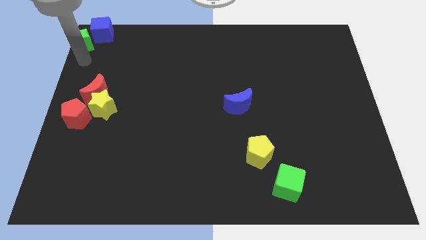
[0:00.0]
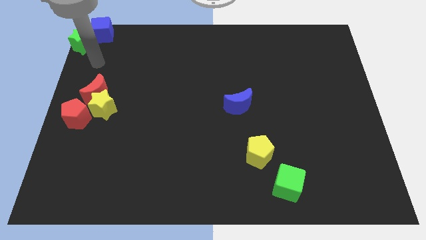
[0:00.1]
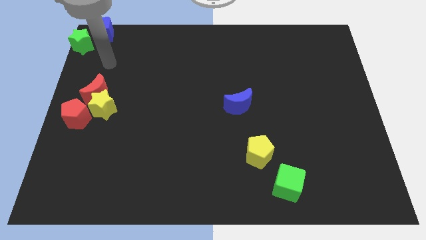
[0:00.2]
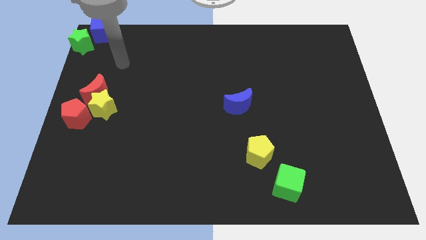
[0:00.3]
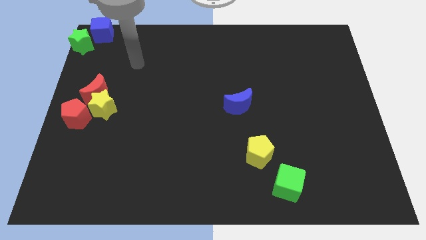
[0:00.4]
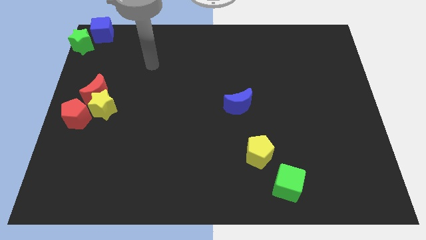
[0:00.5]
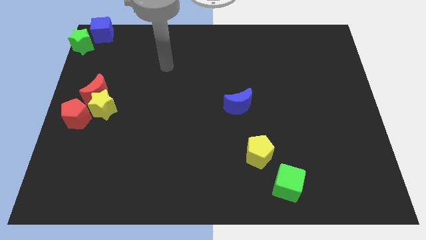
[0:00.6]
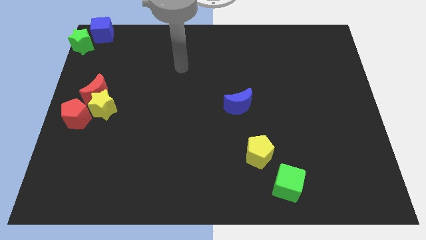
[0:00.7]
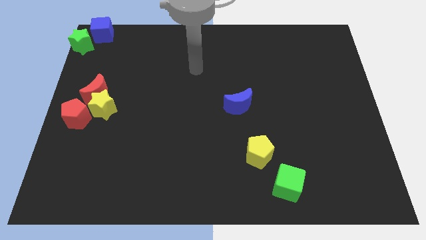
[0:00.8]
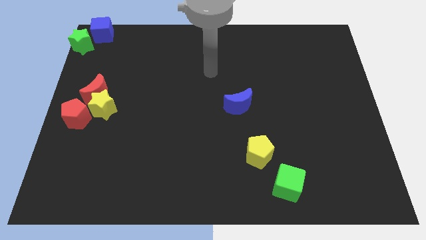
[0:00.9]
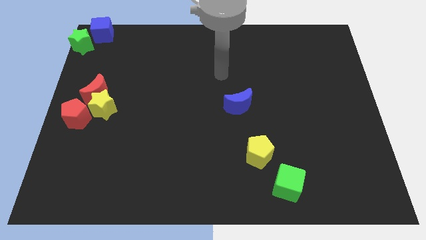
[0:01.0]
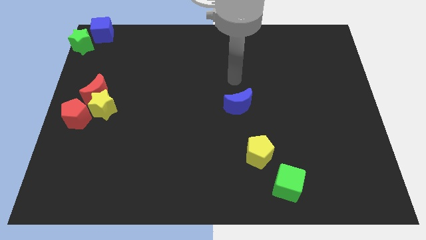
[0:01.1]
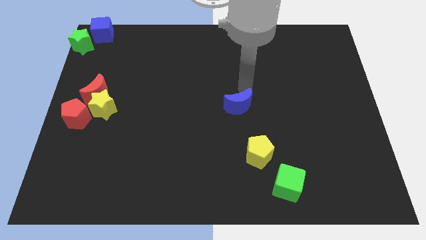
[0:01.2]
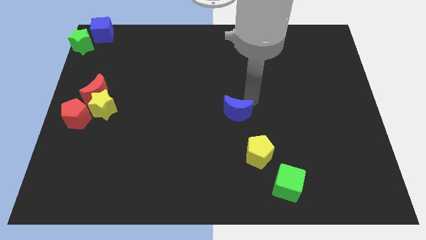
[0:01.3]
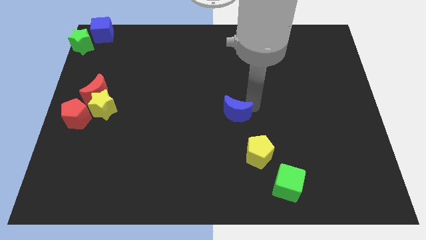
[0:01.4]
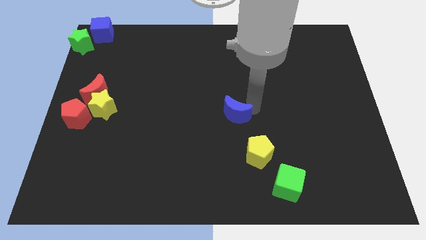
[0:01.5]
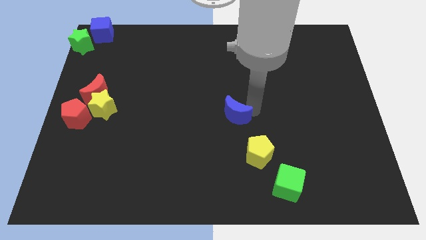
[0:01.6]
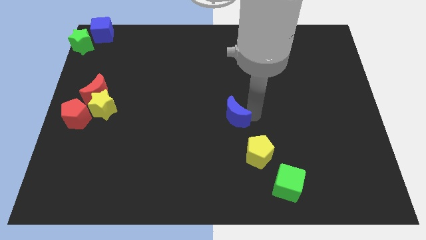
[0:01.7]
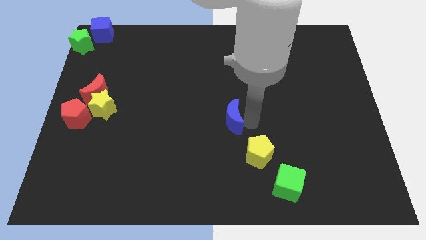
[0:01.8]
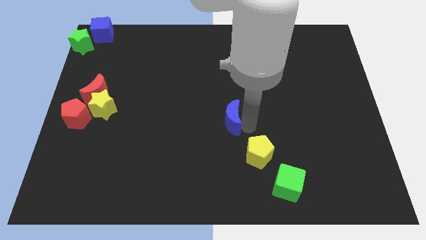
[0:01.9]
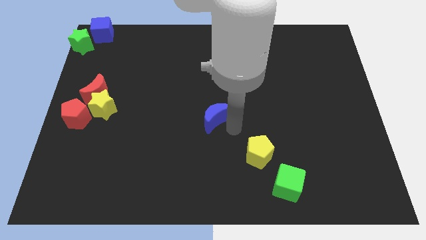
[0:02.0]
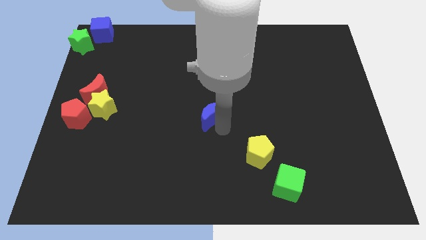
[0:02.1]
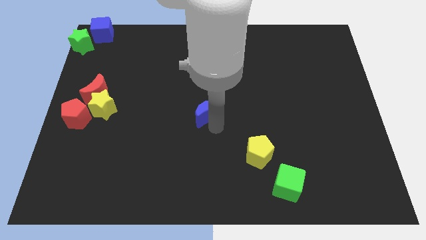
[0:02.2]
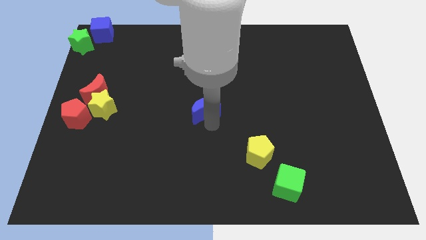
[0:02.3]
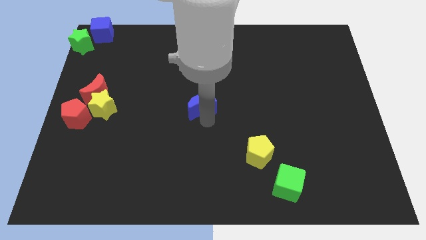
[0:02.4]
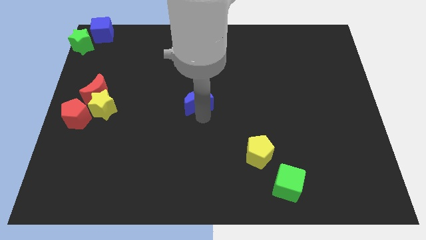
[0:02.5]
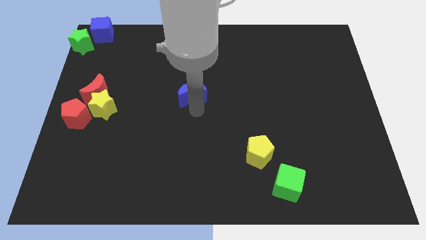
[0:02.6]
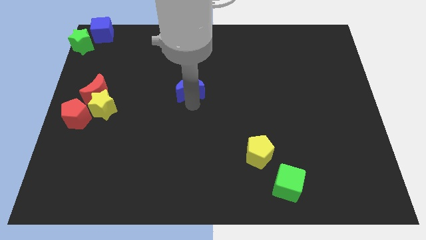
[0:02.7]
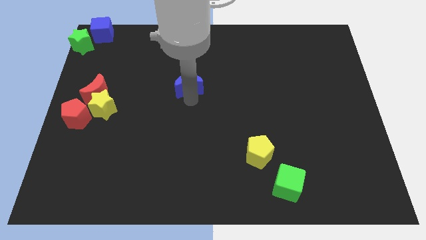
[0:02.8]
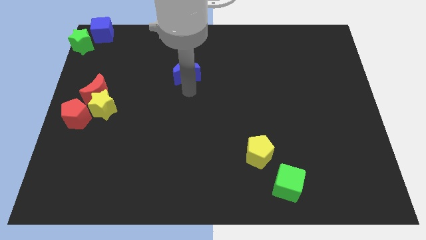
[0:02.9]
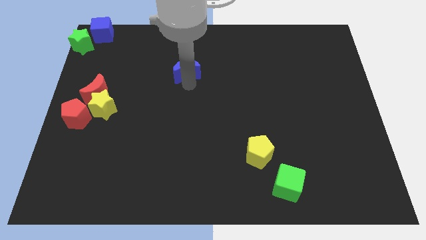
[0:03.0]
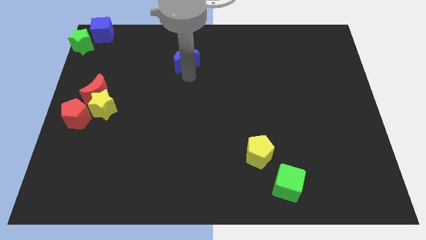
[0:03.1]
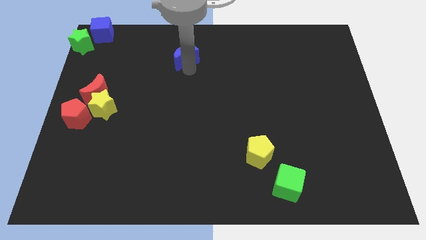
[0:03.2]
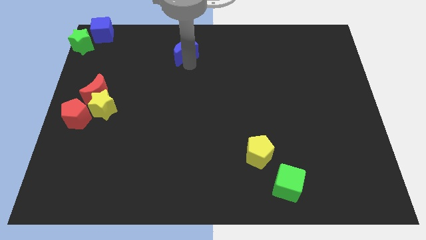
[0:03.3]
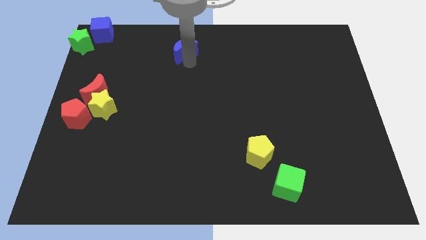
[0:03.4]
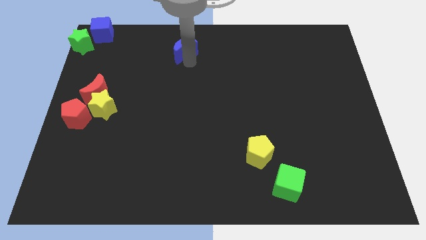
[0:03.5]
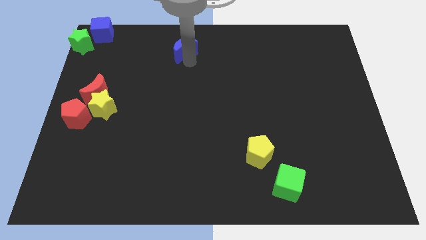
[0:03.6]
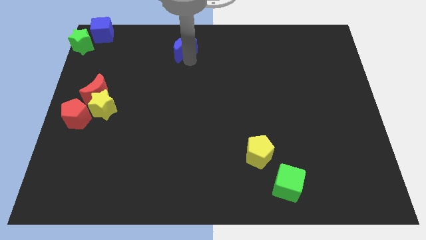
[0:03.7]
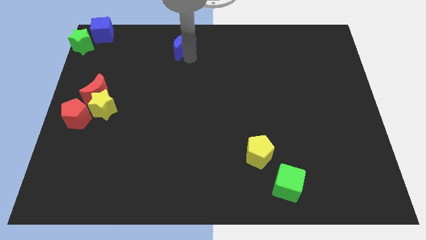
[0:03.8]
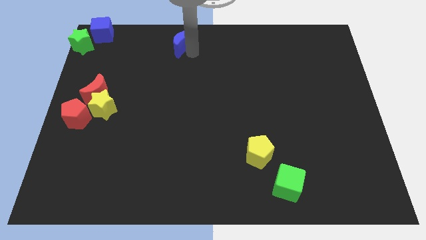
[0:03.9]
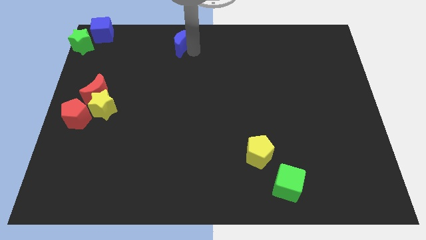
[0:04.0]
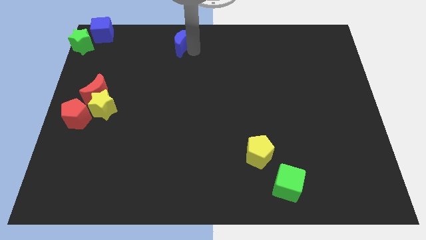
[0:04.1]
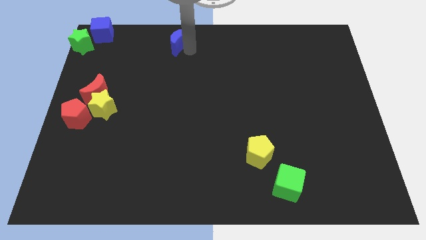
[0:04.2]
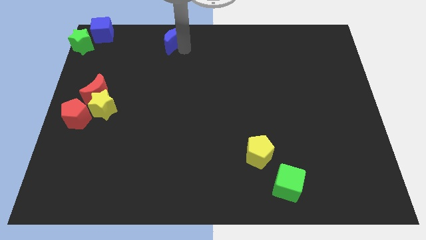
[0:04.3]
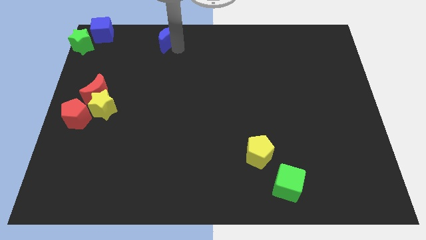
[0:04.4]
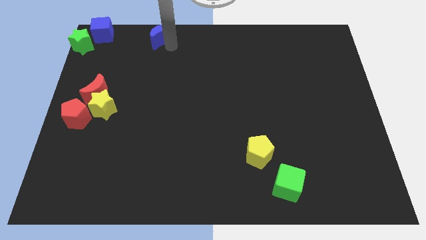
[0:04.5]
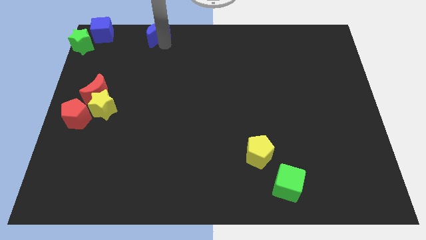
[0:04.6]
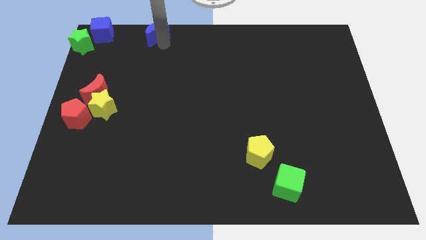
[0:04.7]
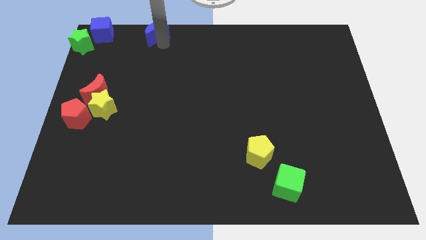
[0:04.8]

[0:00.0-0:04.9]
push the blue crescent to the right of the blue cube

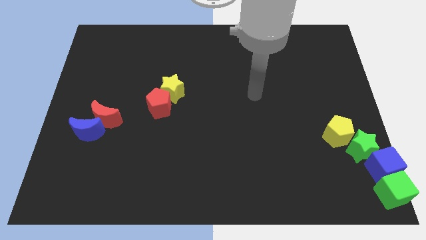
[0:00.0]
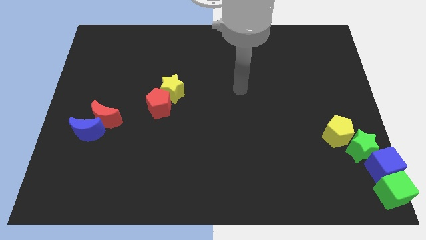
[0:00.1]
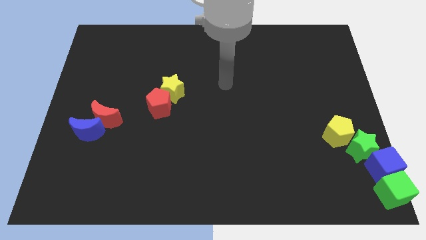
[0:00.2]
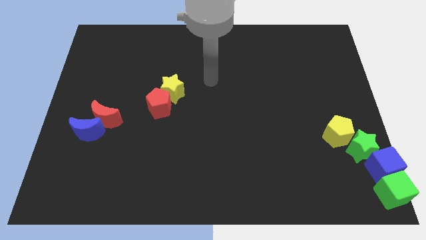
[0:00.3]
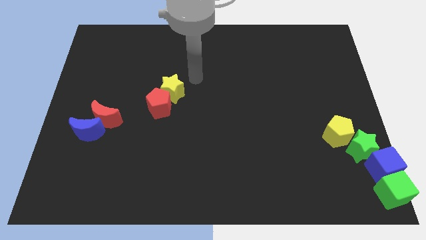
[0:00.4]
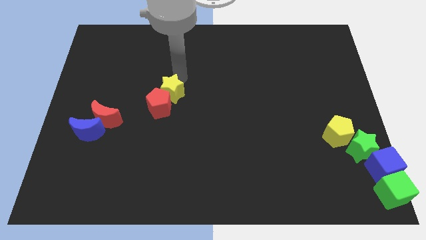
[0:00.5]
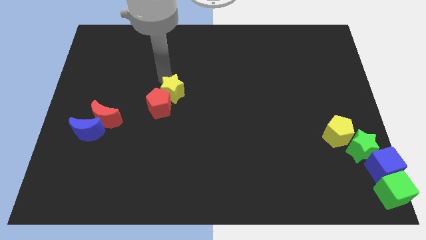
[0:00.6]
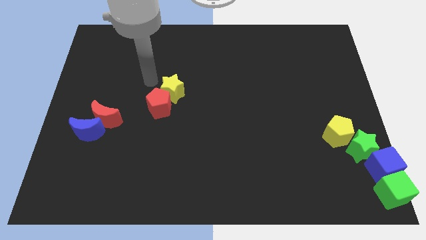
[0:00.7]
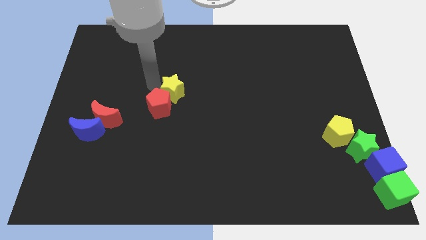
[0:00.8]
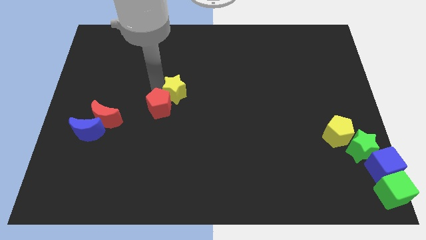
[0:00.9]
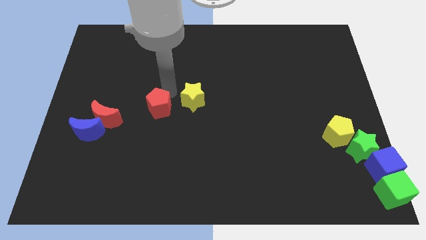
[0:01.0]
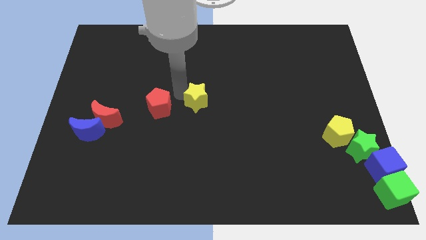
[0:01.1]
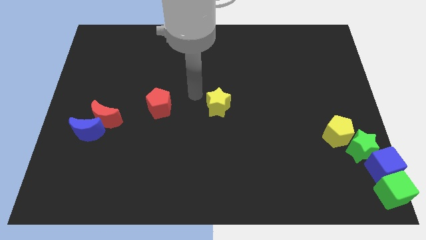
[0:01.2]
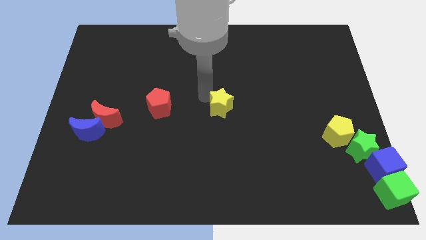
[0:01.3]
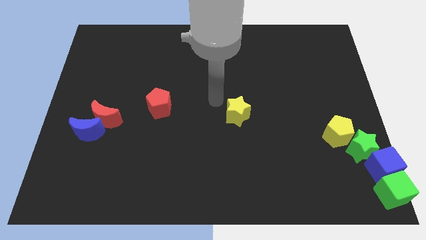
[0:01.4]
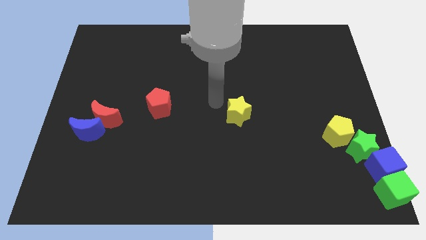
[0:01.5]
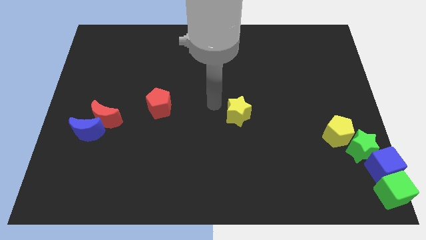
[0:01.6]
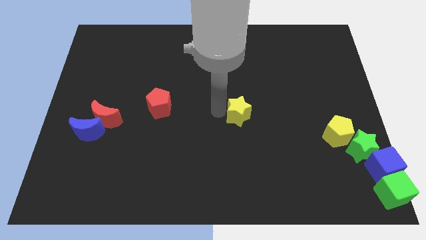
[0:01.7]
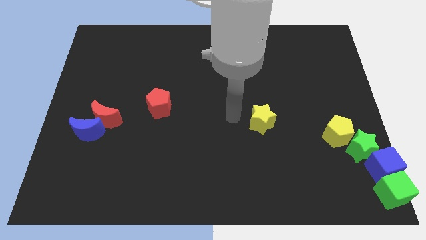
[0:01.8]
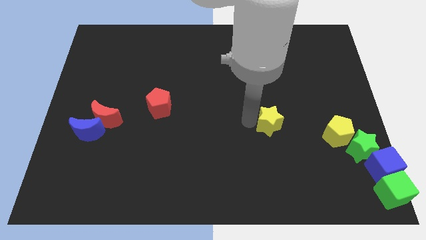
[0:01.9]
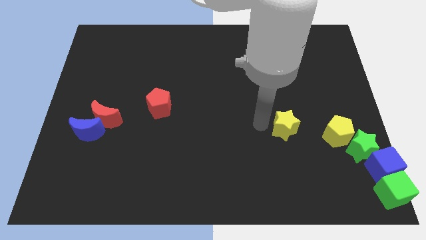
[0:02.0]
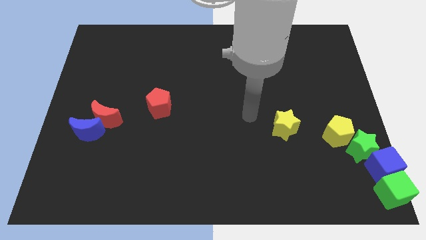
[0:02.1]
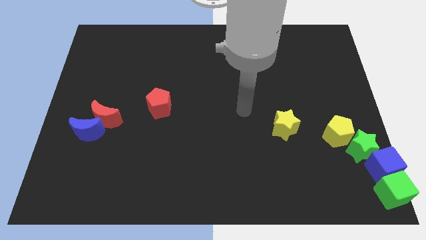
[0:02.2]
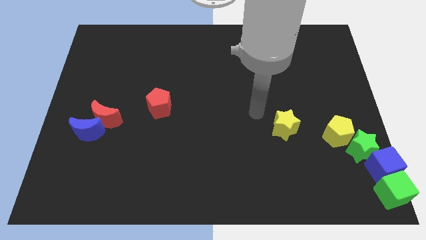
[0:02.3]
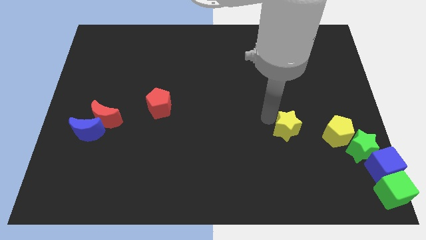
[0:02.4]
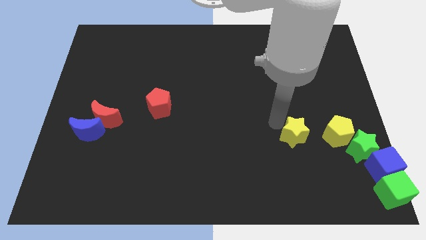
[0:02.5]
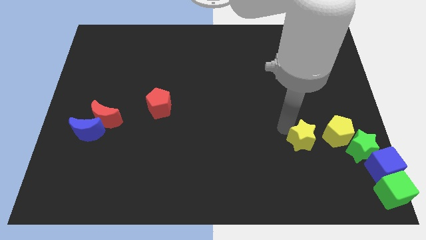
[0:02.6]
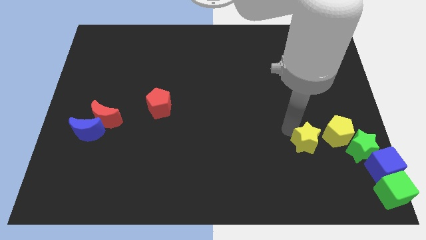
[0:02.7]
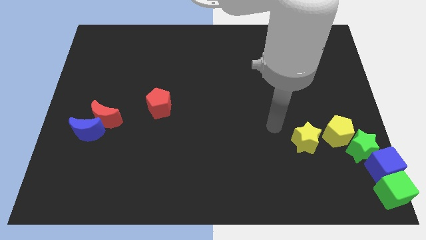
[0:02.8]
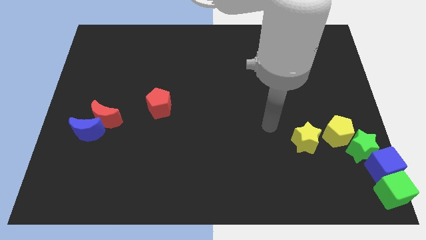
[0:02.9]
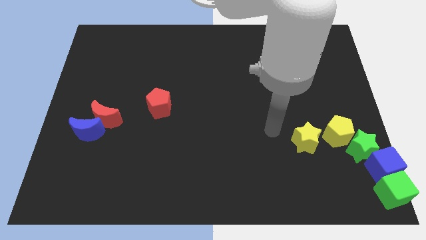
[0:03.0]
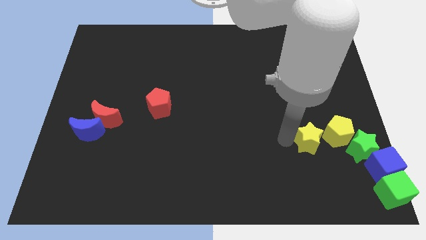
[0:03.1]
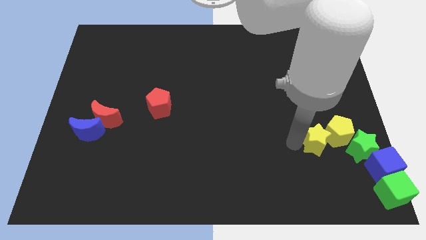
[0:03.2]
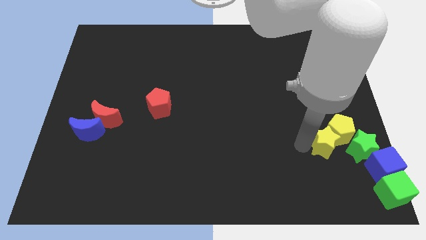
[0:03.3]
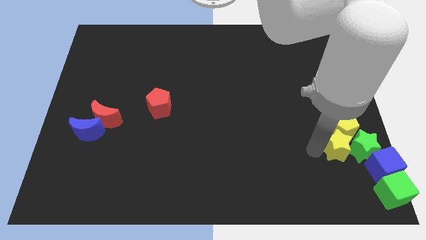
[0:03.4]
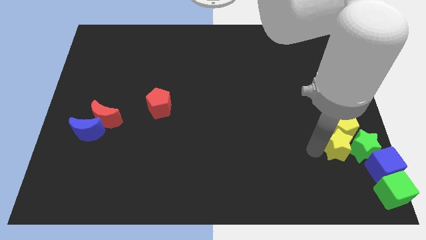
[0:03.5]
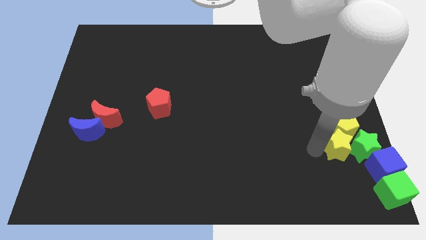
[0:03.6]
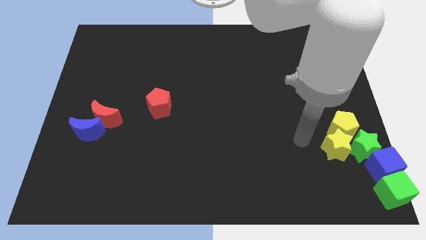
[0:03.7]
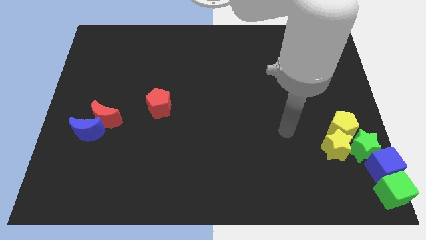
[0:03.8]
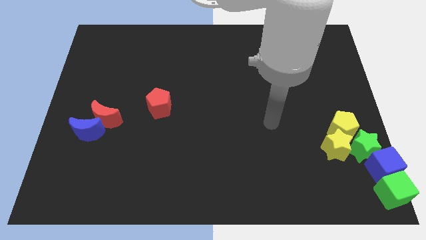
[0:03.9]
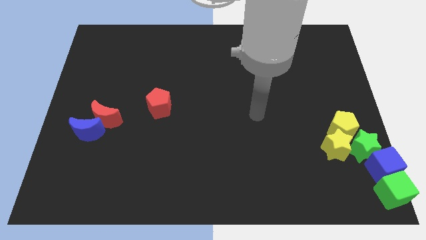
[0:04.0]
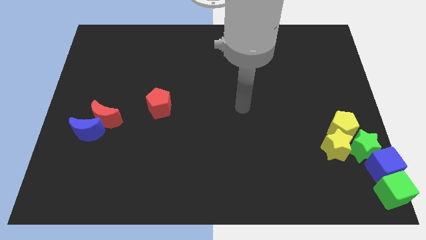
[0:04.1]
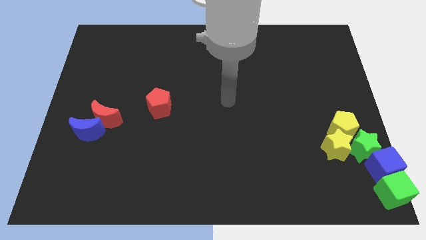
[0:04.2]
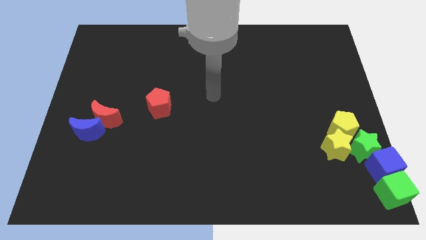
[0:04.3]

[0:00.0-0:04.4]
push the yellow star to the left side of the green star
